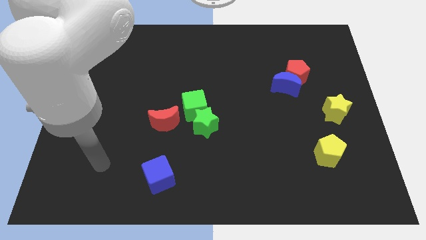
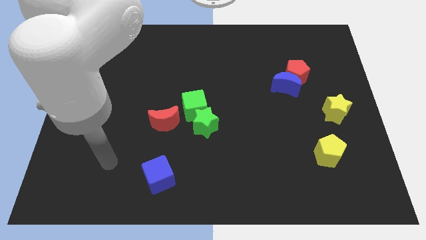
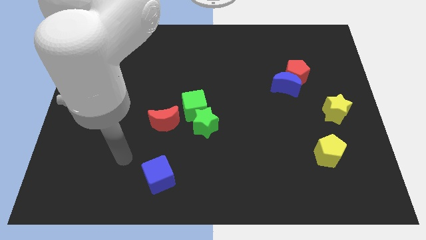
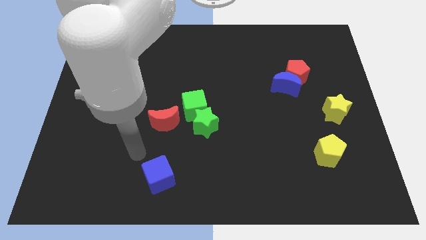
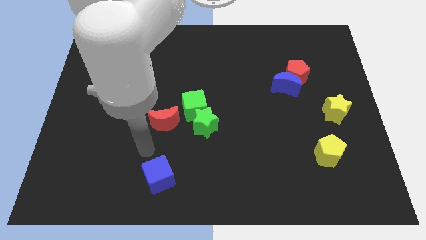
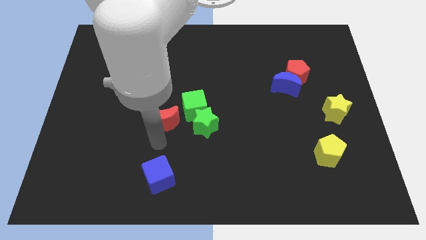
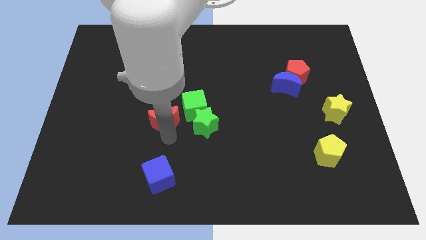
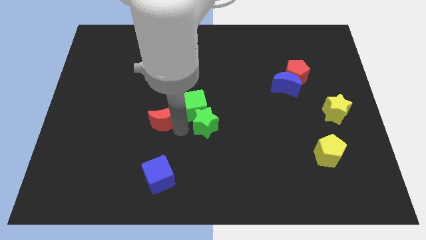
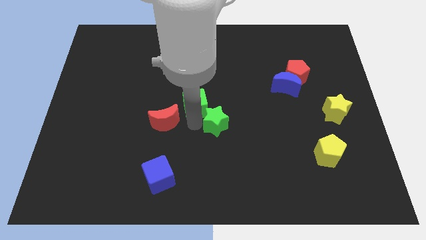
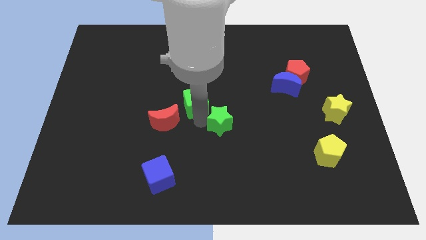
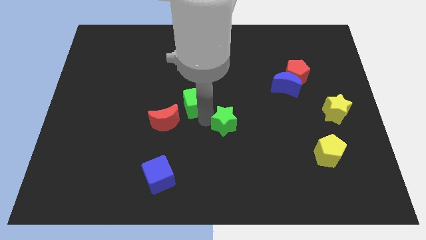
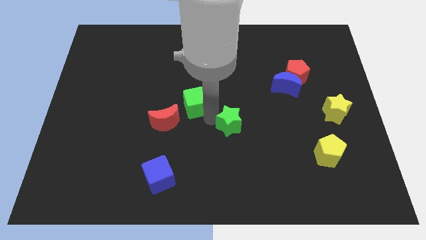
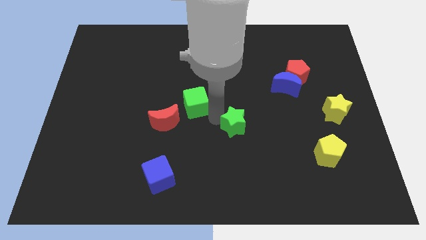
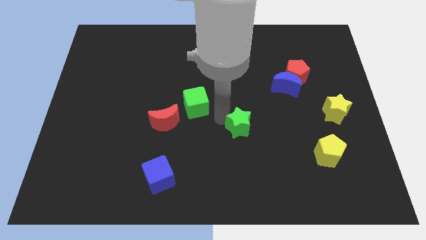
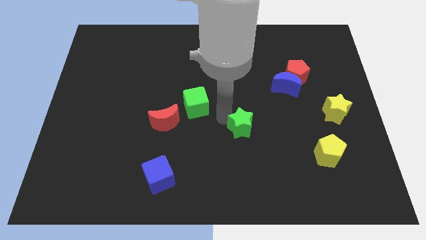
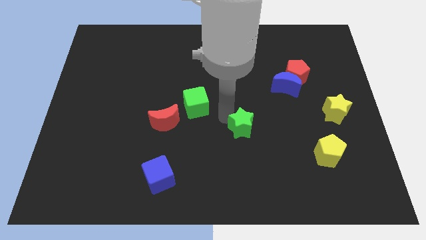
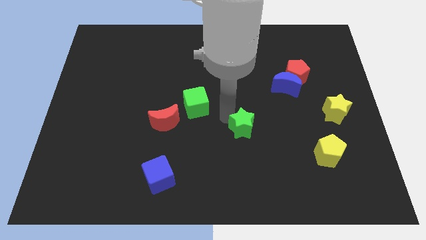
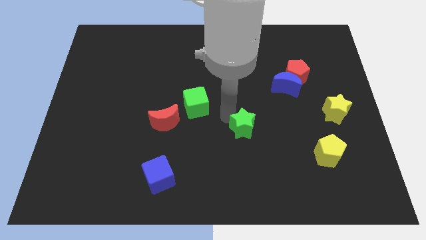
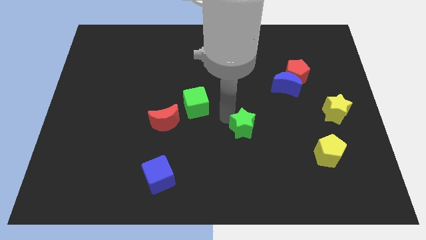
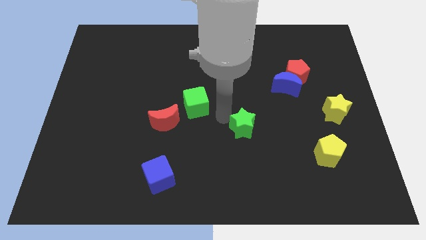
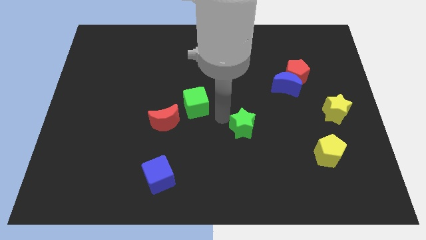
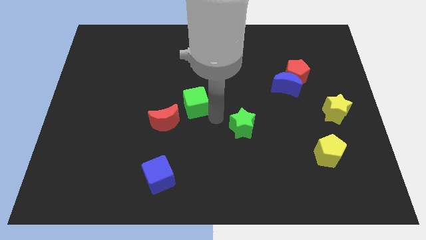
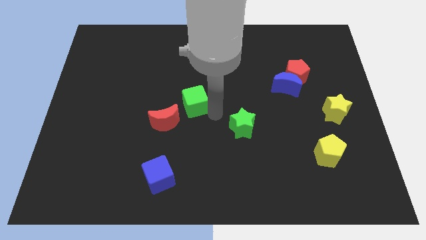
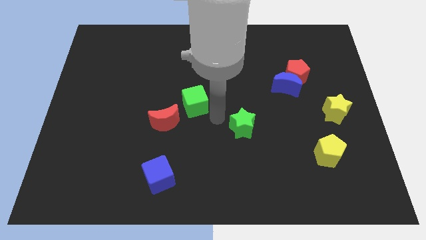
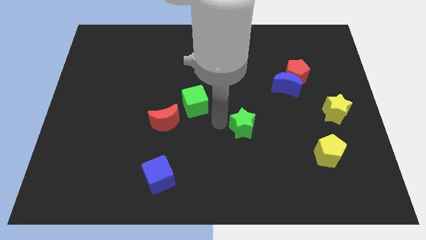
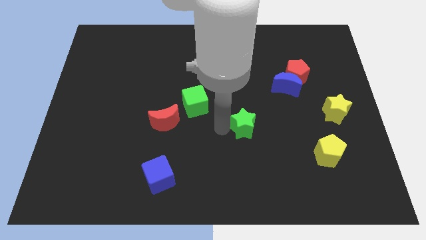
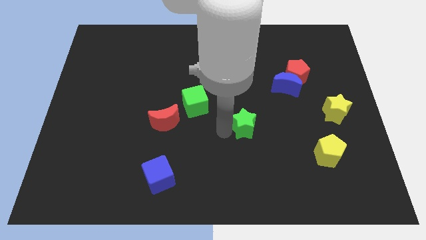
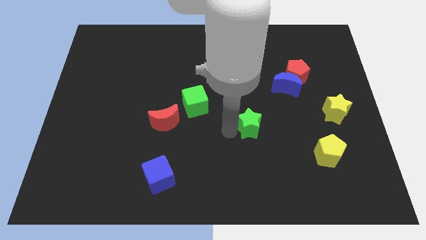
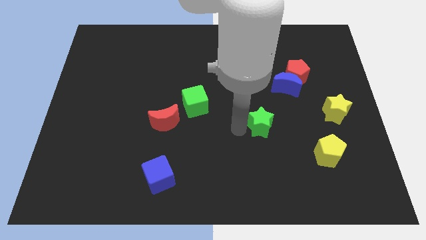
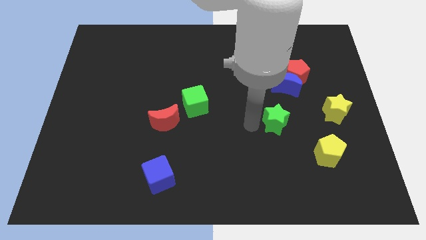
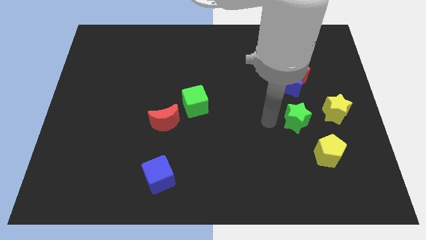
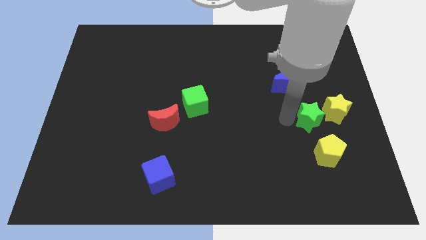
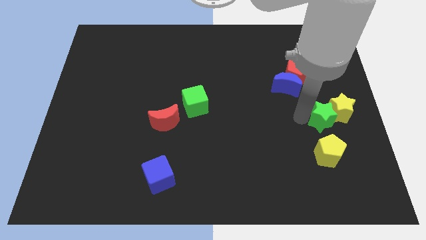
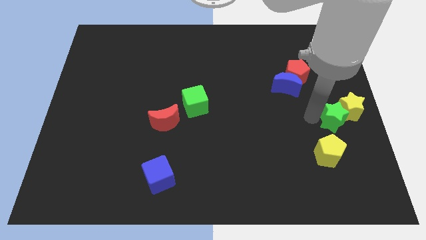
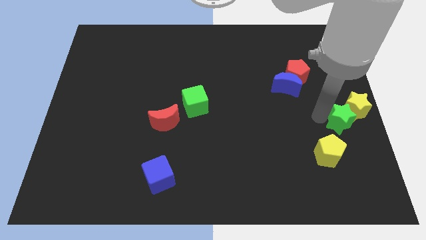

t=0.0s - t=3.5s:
put the green star next to the yellow star

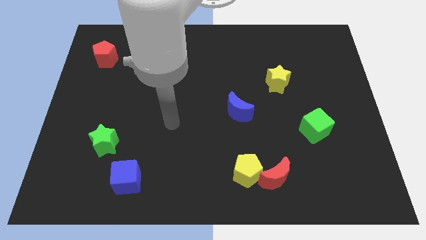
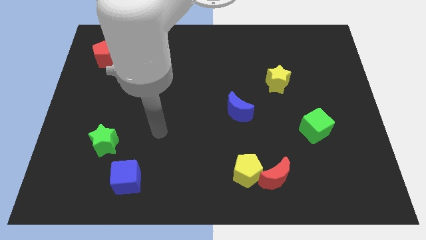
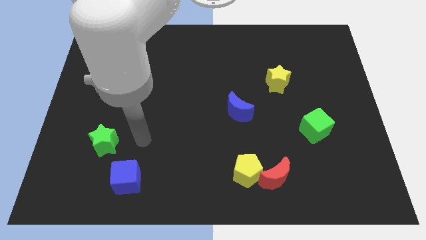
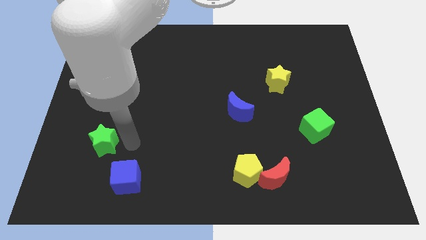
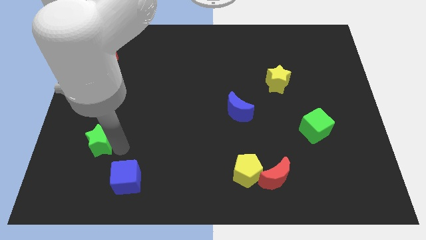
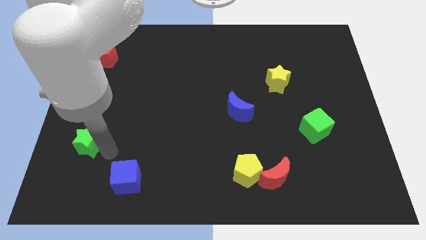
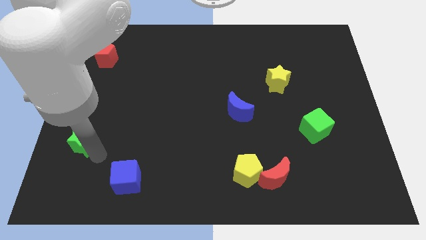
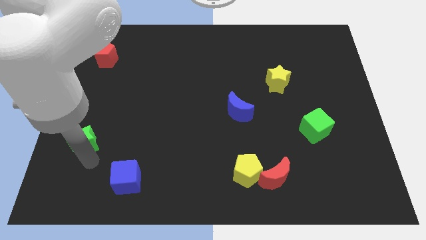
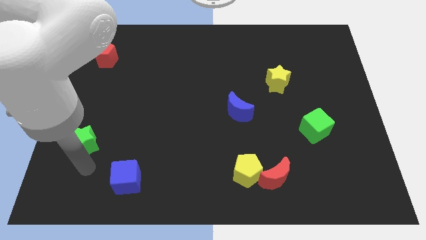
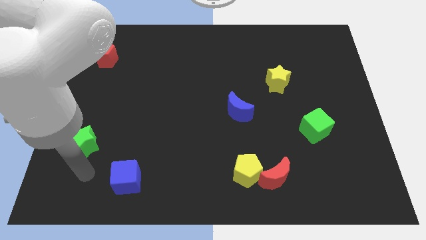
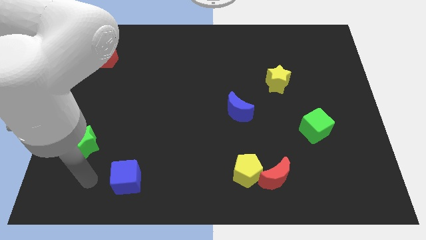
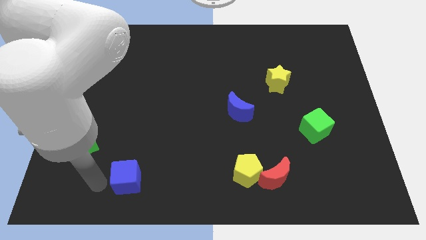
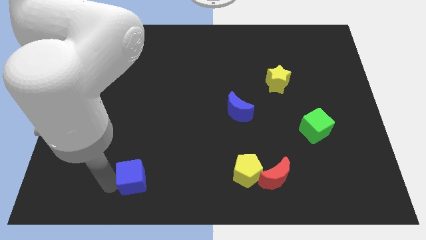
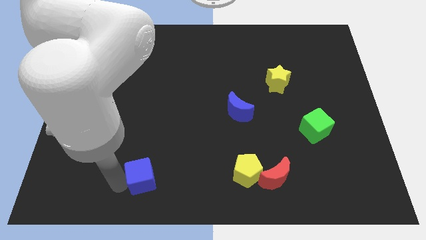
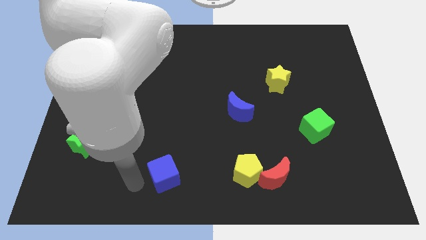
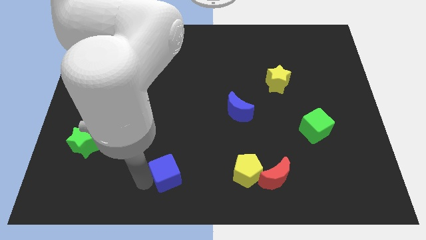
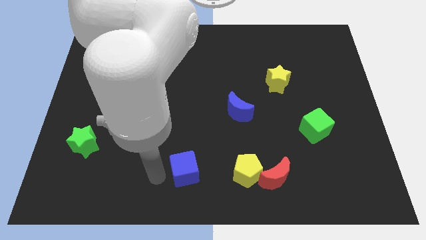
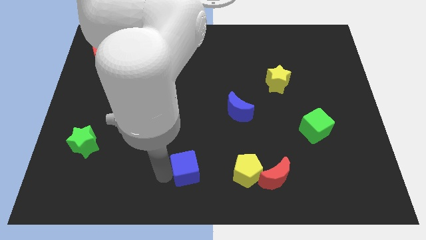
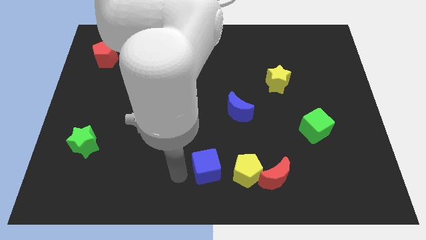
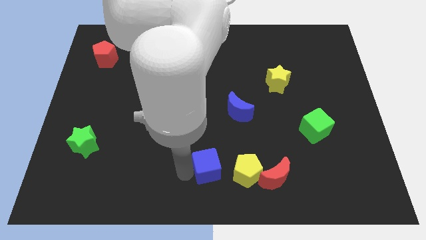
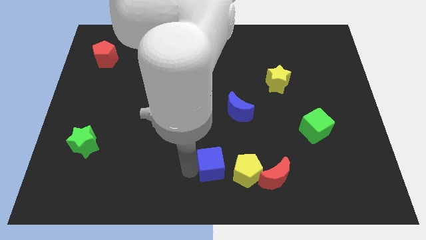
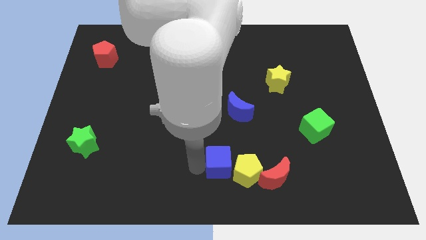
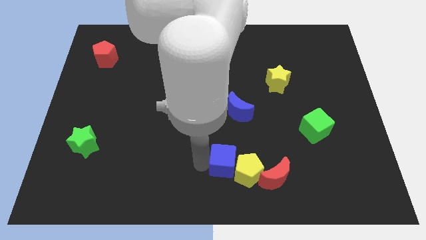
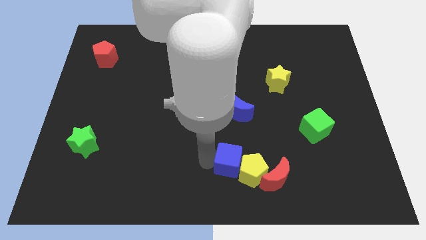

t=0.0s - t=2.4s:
push the blue cube to the yellow pentagon

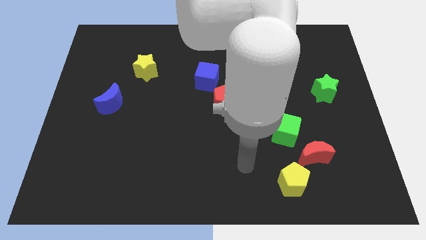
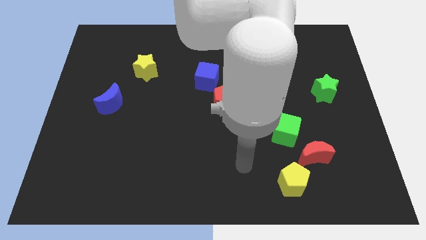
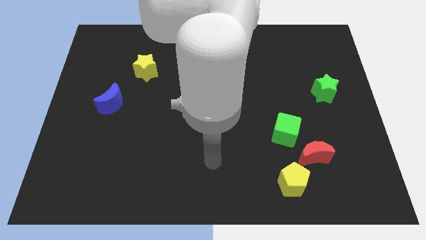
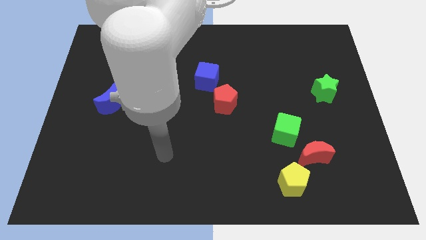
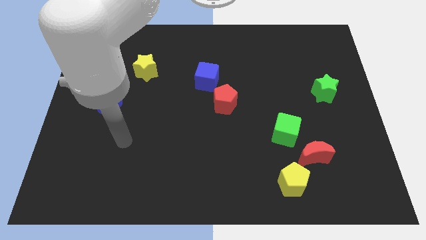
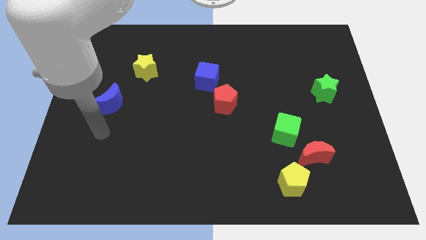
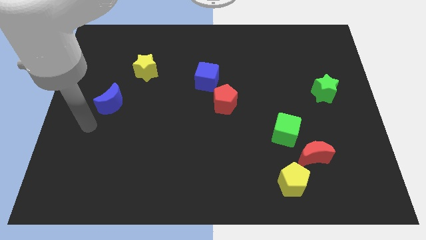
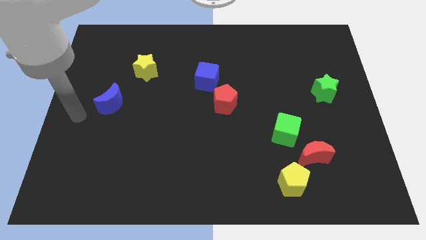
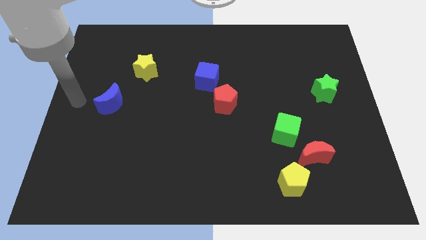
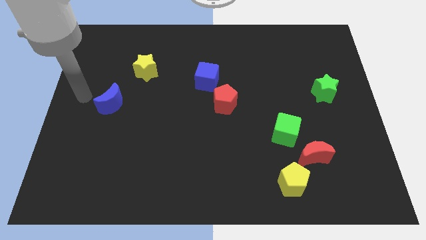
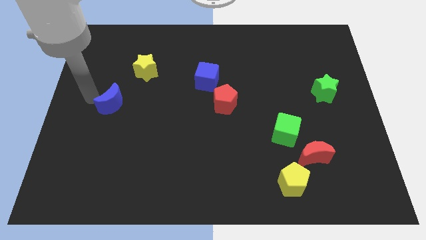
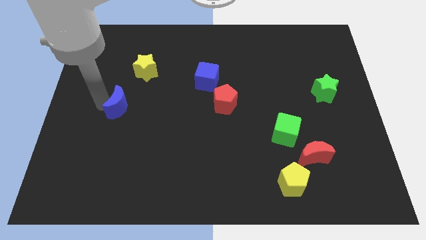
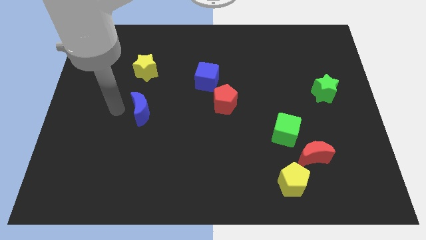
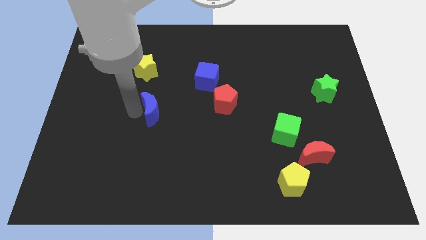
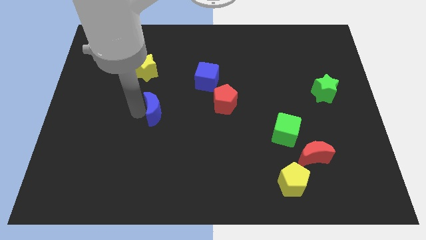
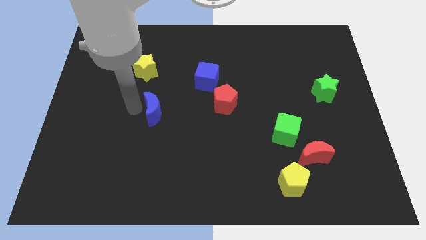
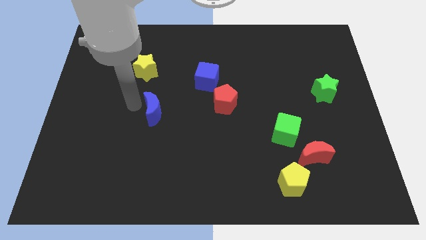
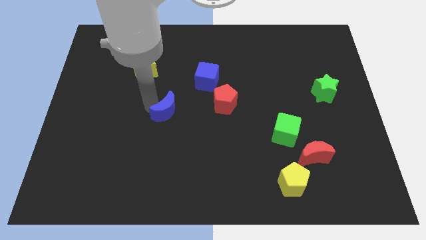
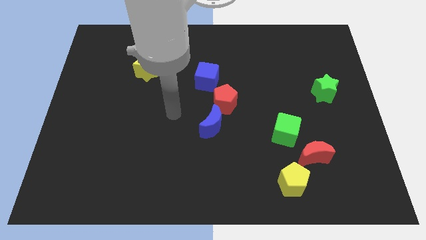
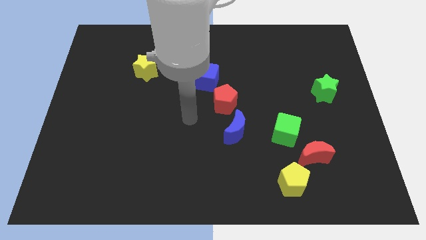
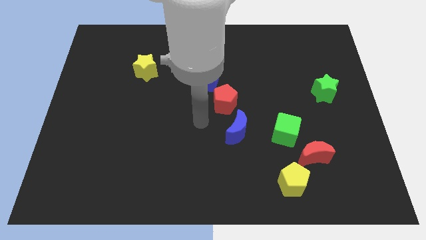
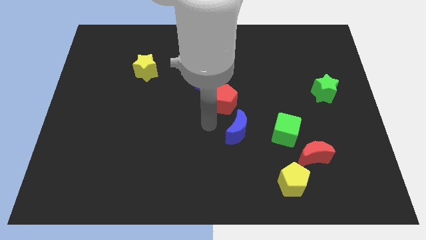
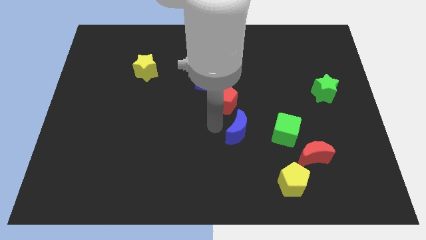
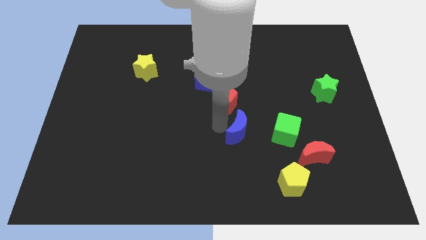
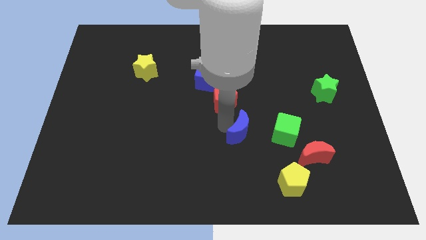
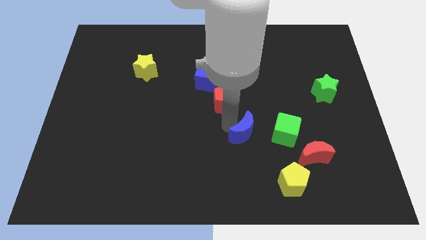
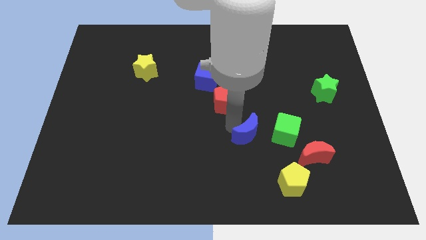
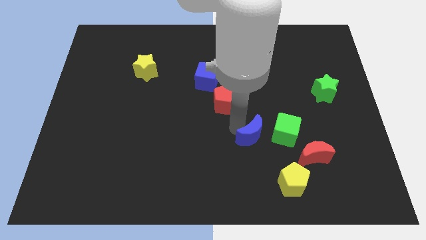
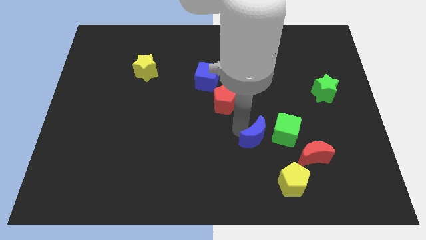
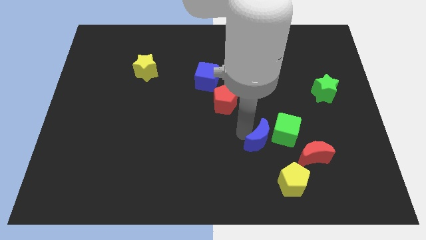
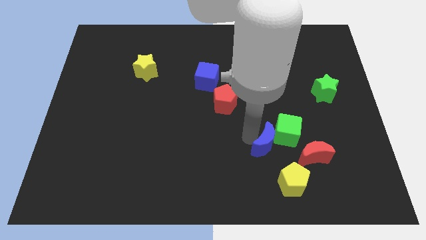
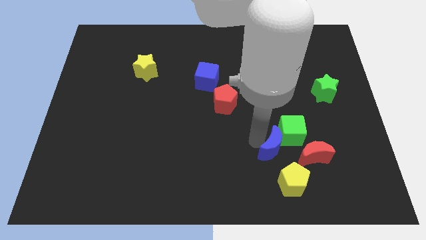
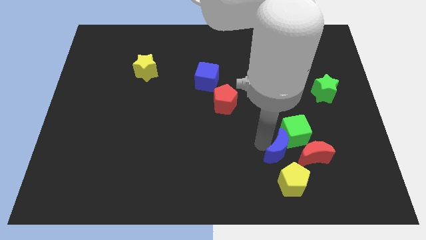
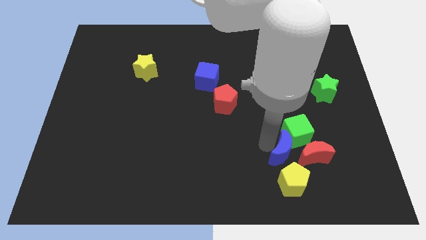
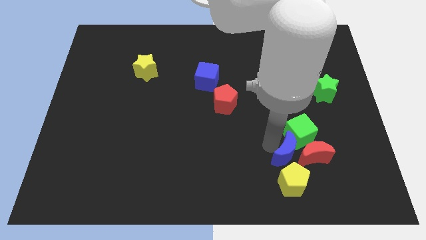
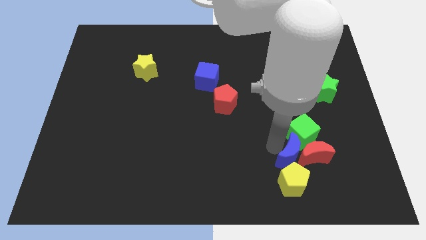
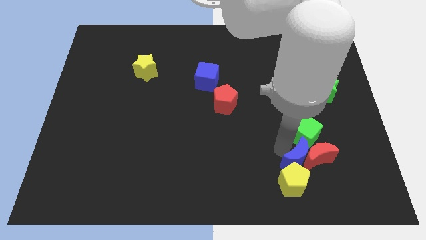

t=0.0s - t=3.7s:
slide the blue moon towards the red moon
